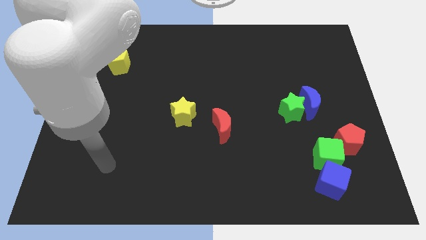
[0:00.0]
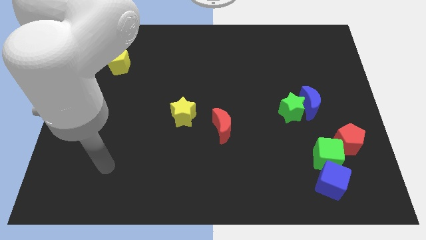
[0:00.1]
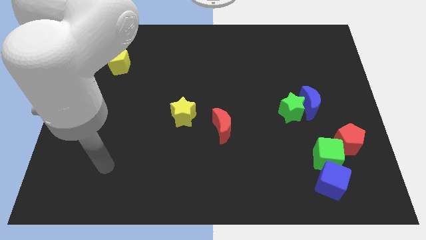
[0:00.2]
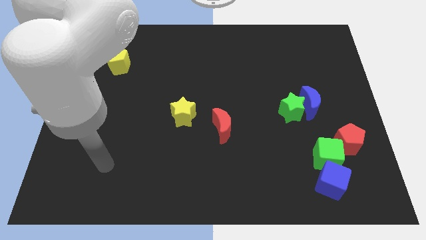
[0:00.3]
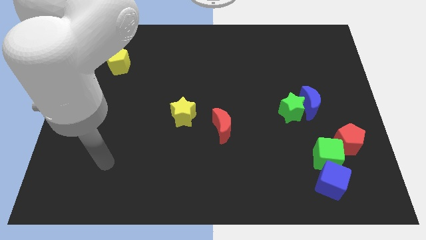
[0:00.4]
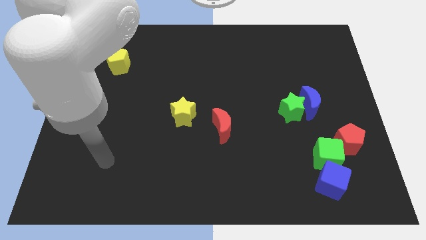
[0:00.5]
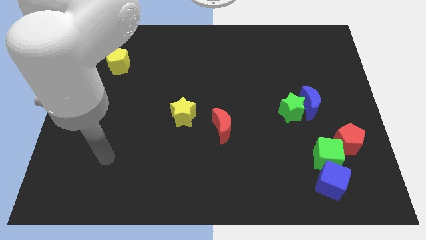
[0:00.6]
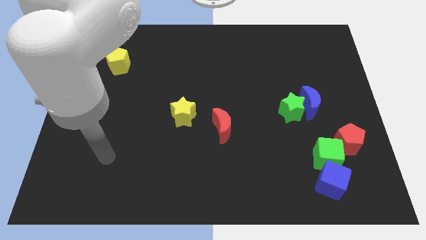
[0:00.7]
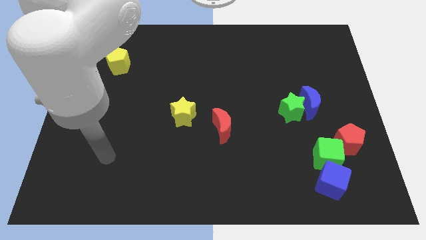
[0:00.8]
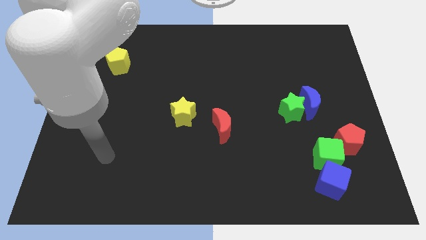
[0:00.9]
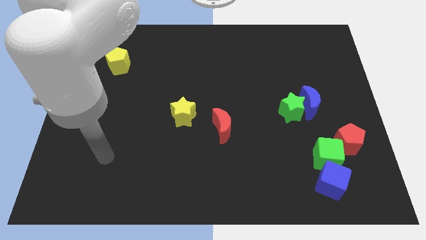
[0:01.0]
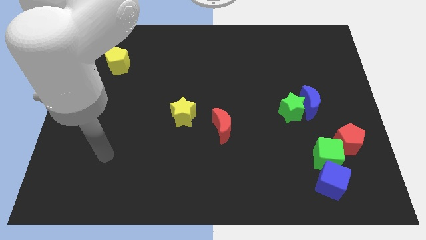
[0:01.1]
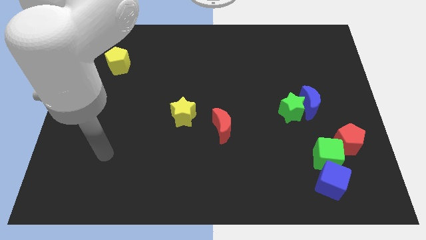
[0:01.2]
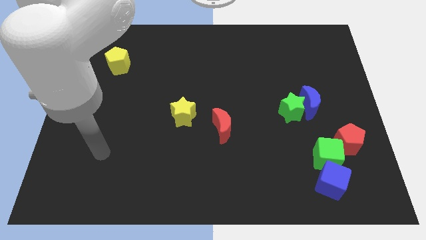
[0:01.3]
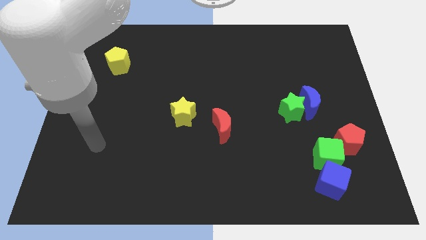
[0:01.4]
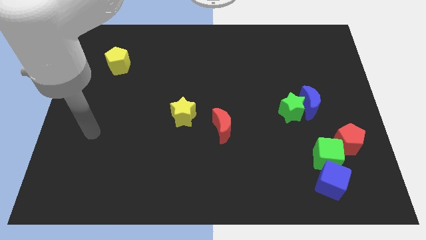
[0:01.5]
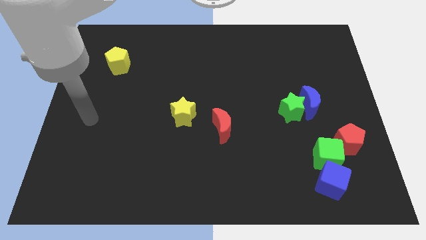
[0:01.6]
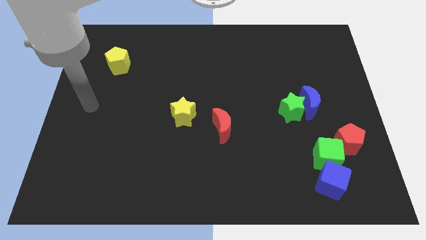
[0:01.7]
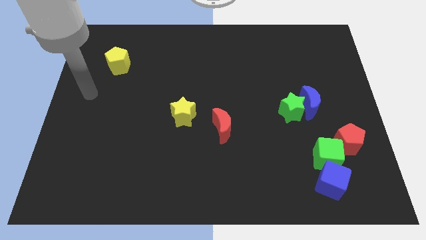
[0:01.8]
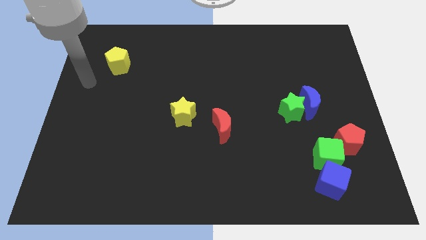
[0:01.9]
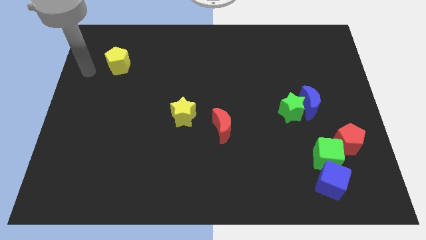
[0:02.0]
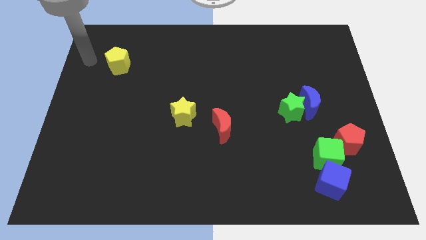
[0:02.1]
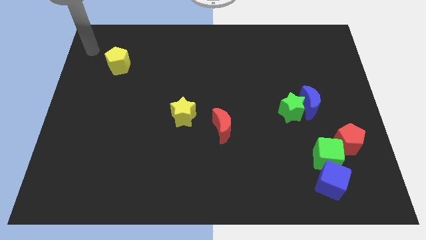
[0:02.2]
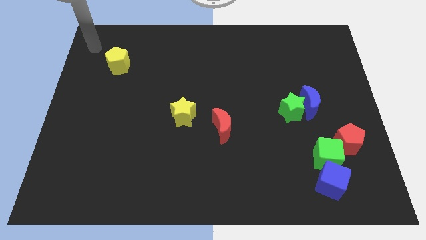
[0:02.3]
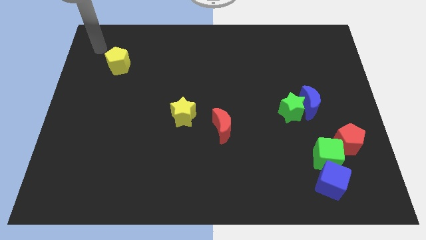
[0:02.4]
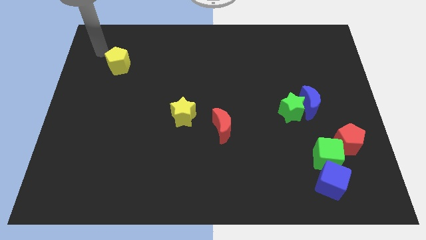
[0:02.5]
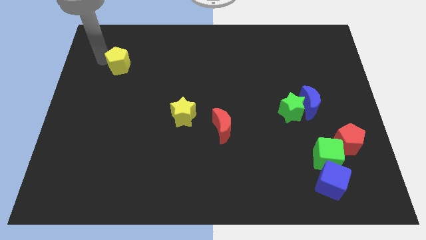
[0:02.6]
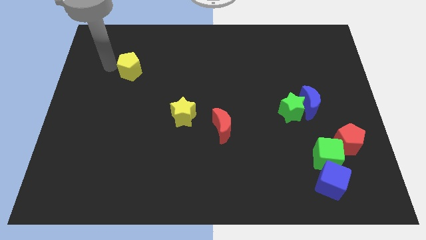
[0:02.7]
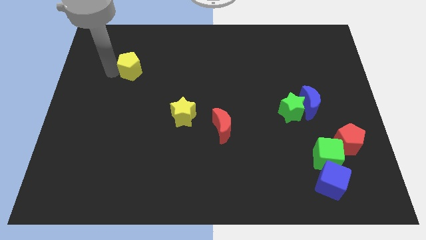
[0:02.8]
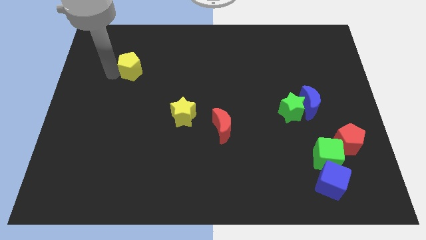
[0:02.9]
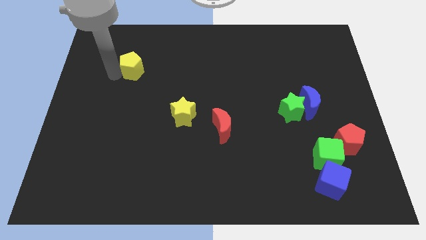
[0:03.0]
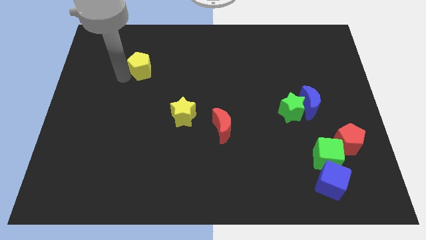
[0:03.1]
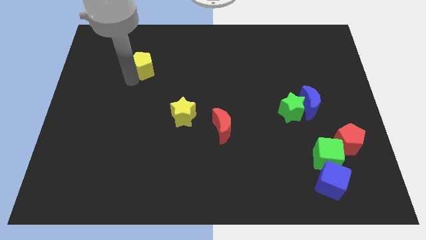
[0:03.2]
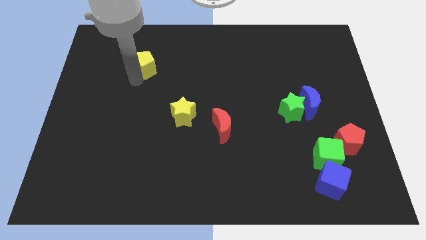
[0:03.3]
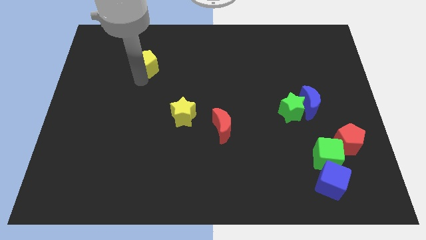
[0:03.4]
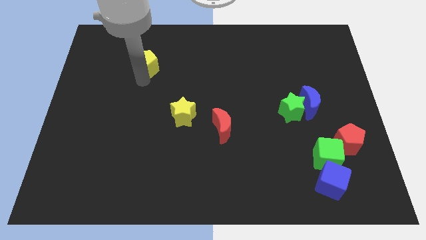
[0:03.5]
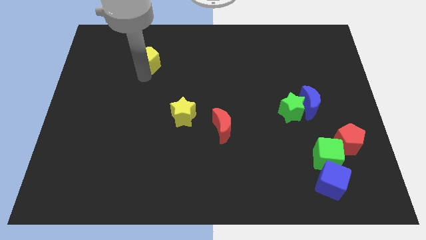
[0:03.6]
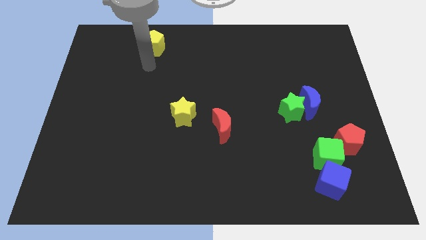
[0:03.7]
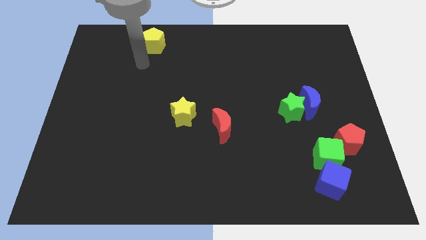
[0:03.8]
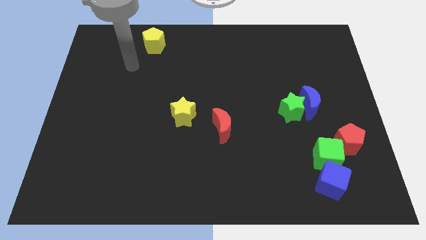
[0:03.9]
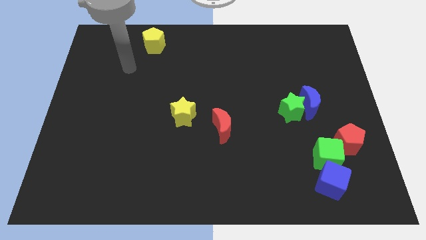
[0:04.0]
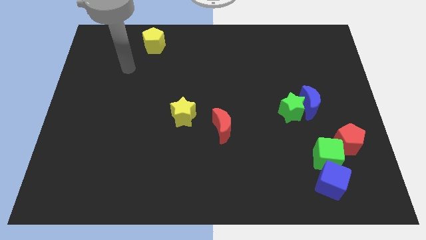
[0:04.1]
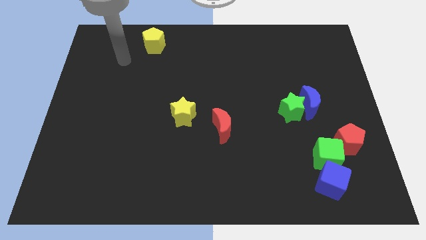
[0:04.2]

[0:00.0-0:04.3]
push yellow pentagon diagonal top left of the yellow star

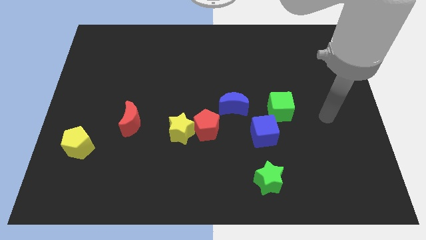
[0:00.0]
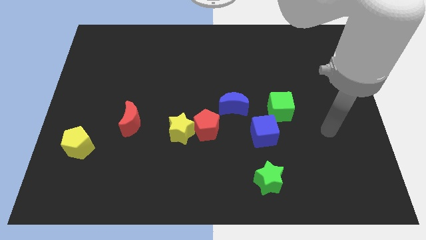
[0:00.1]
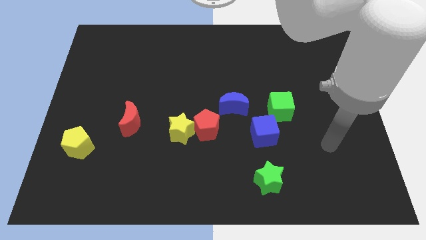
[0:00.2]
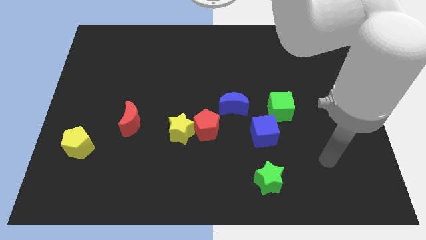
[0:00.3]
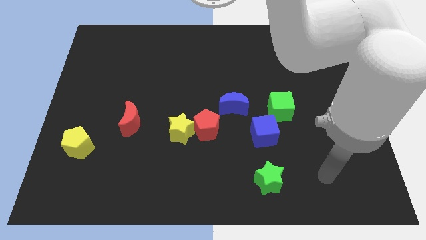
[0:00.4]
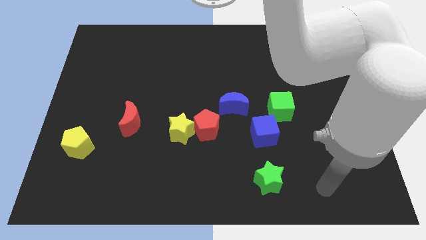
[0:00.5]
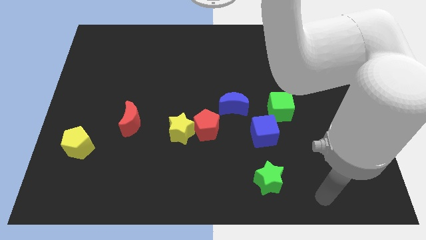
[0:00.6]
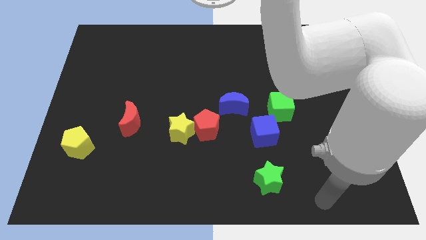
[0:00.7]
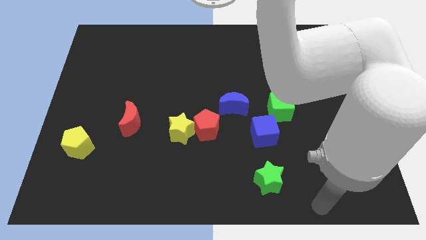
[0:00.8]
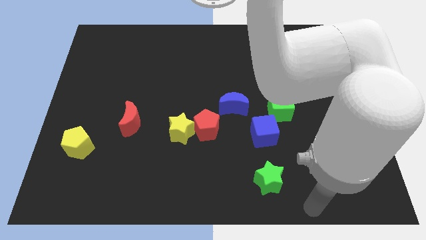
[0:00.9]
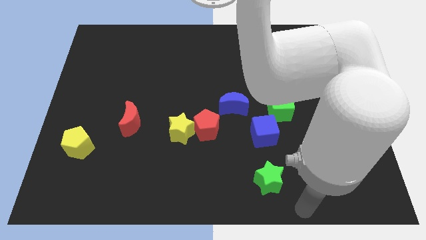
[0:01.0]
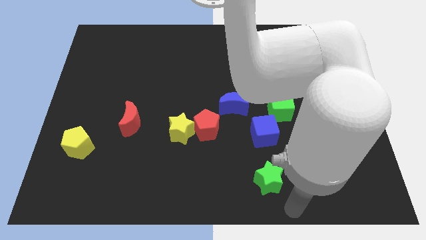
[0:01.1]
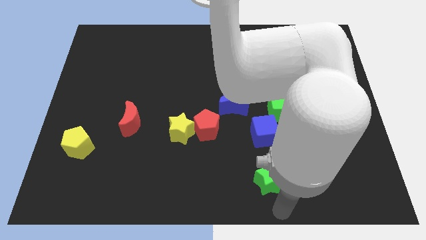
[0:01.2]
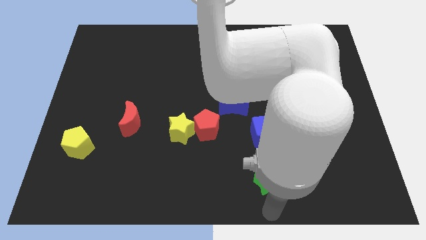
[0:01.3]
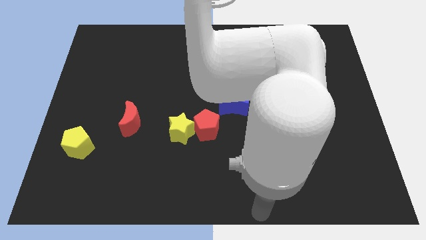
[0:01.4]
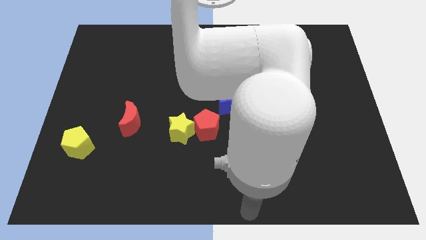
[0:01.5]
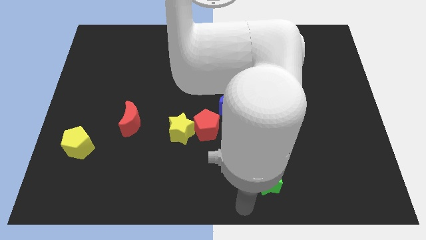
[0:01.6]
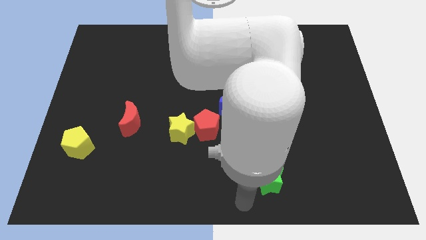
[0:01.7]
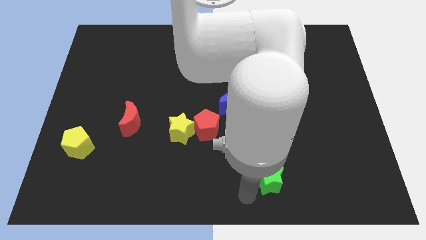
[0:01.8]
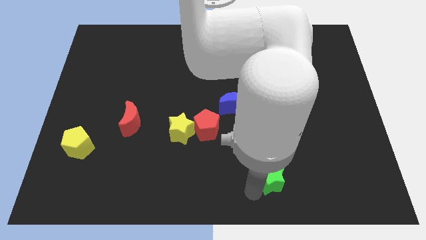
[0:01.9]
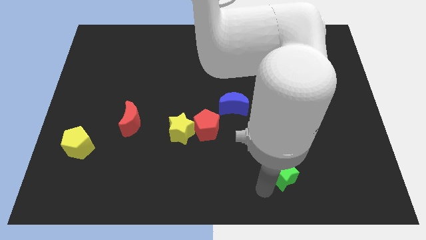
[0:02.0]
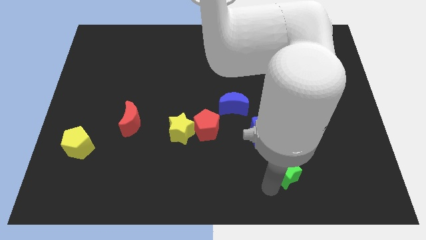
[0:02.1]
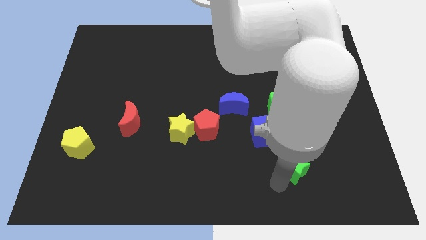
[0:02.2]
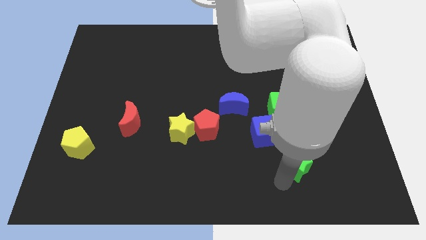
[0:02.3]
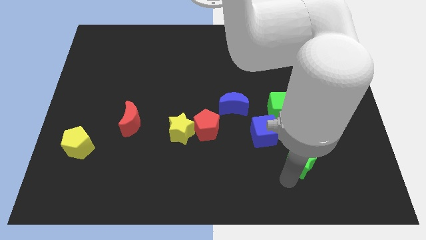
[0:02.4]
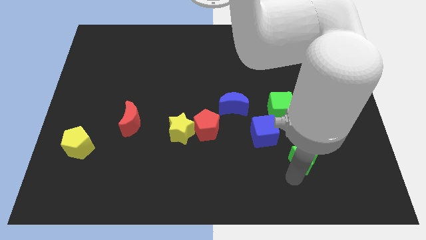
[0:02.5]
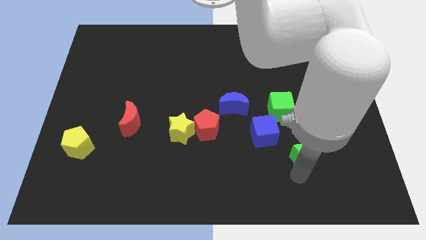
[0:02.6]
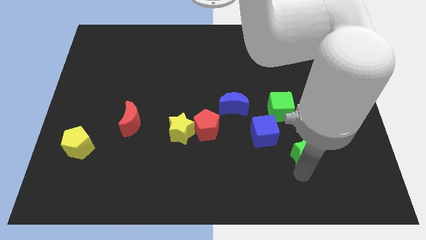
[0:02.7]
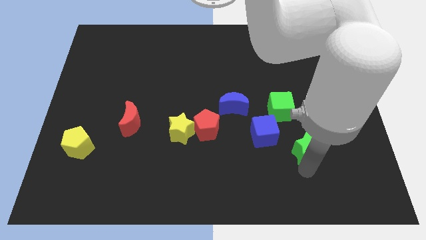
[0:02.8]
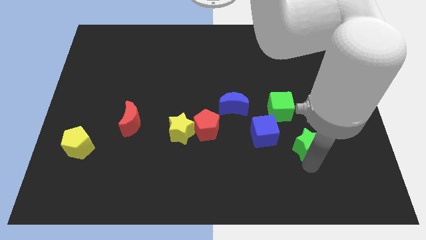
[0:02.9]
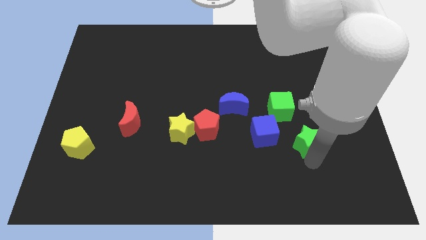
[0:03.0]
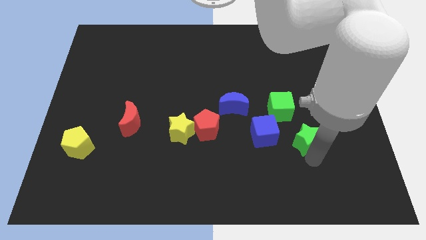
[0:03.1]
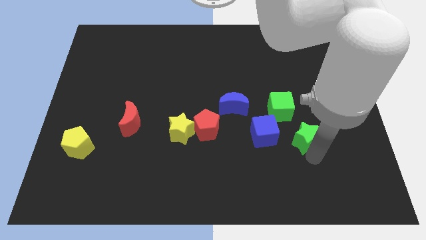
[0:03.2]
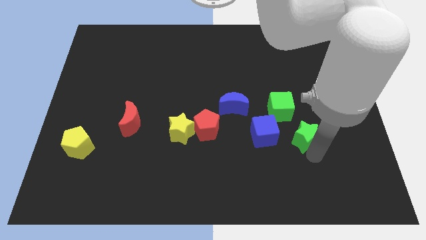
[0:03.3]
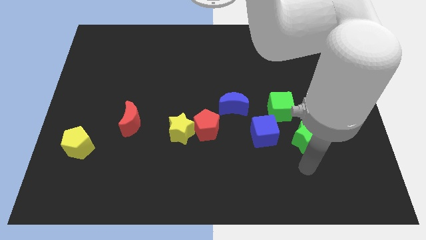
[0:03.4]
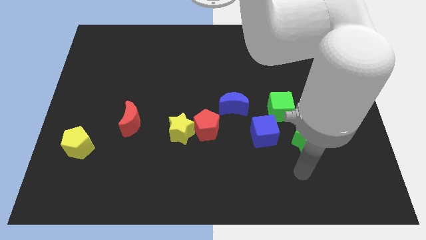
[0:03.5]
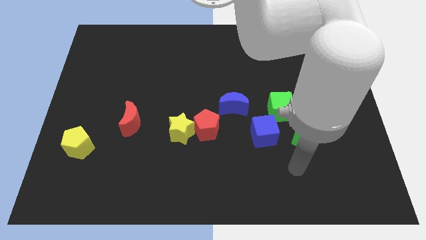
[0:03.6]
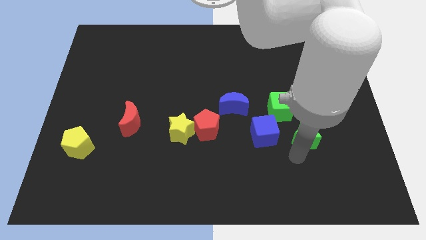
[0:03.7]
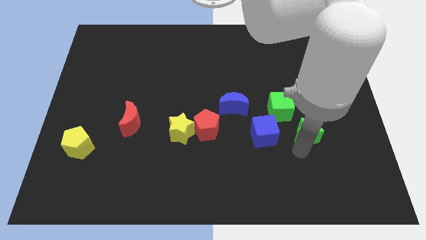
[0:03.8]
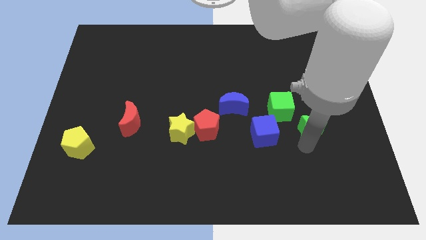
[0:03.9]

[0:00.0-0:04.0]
move the green star to the right side of the blue cube

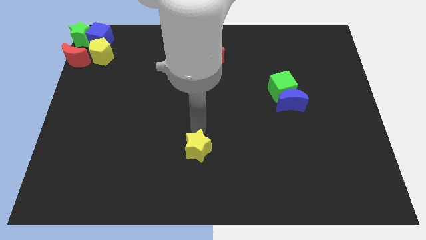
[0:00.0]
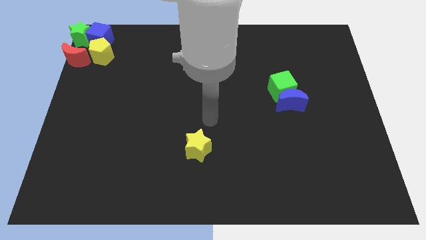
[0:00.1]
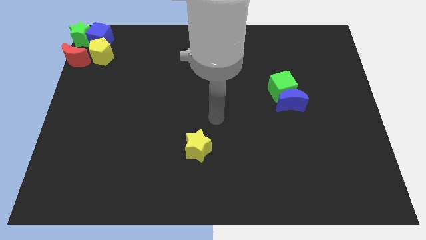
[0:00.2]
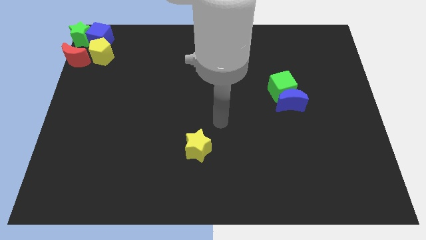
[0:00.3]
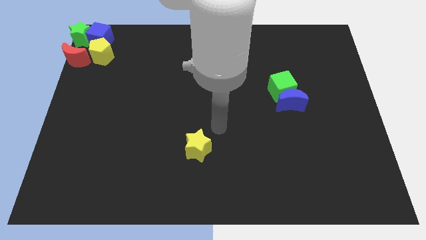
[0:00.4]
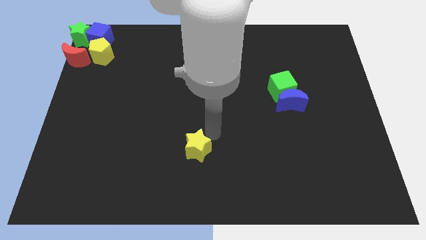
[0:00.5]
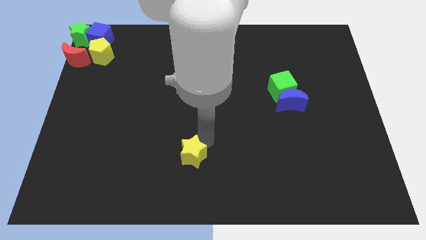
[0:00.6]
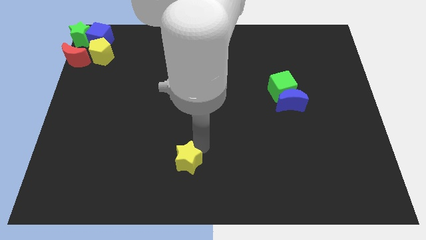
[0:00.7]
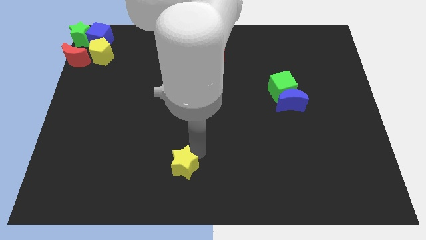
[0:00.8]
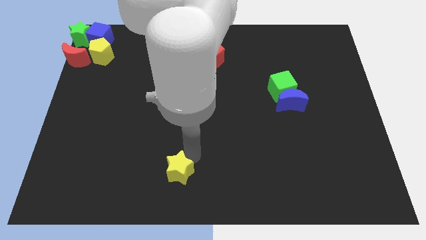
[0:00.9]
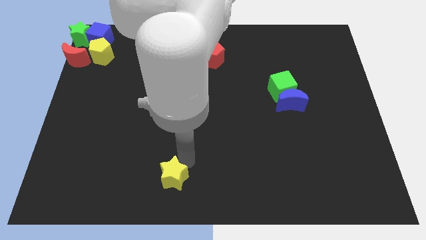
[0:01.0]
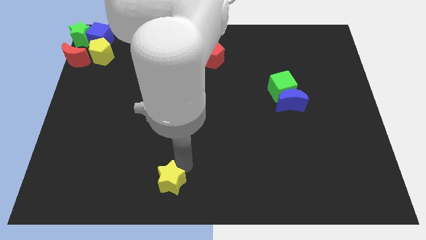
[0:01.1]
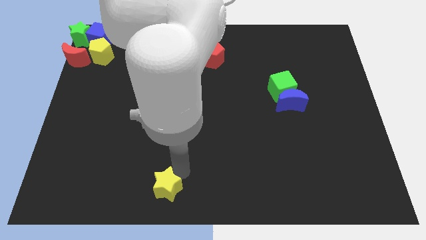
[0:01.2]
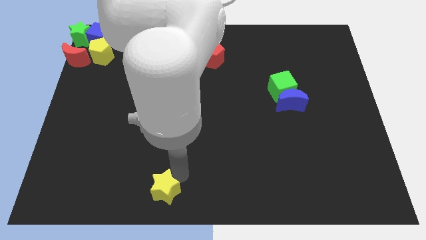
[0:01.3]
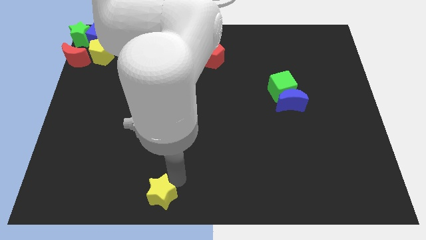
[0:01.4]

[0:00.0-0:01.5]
move the yellow star to the bottom of the board
